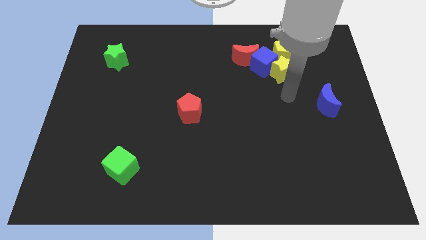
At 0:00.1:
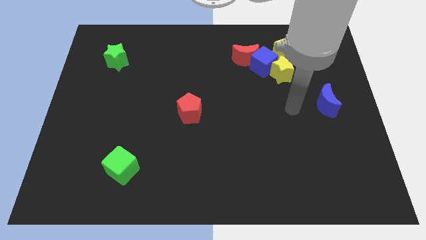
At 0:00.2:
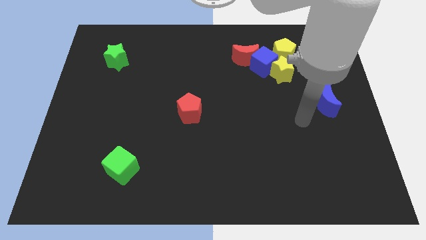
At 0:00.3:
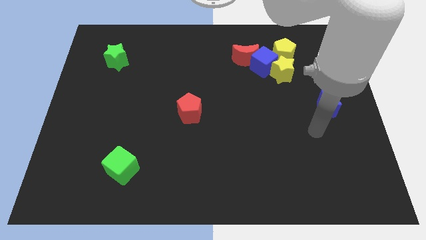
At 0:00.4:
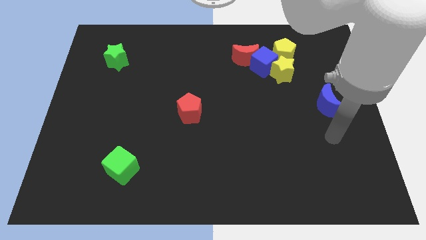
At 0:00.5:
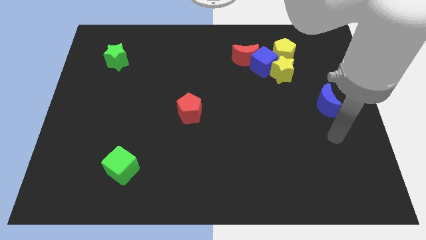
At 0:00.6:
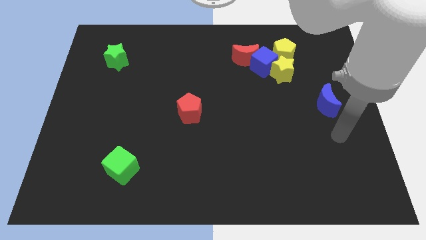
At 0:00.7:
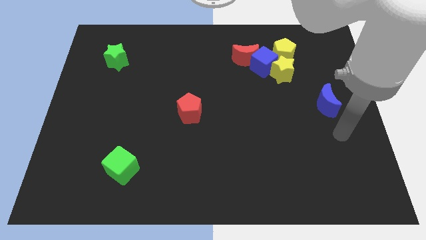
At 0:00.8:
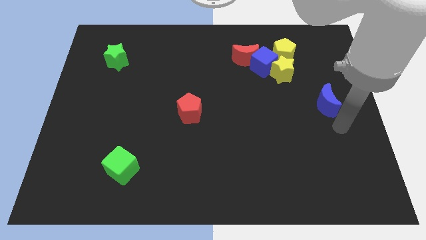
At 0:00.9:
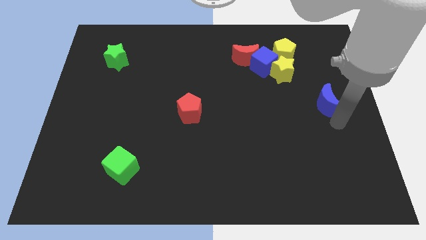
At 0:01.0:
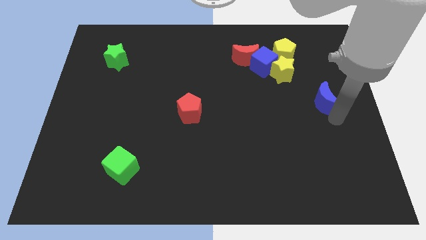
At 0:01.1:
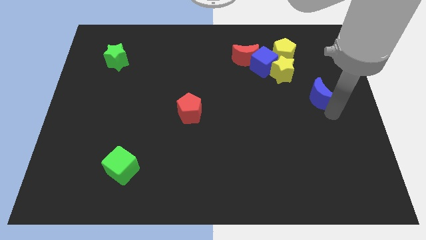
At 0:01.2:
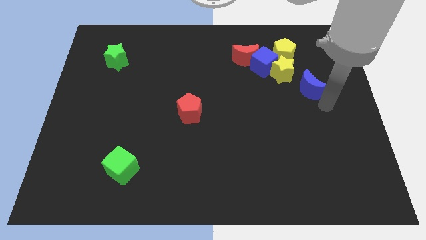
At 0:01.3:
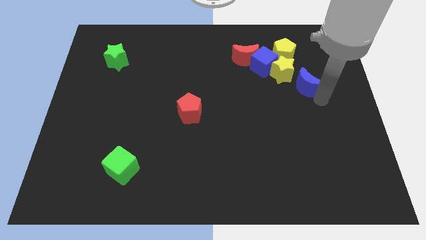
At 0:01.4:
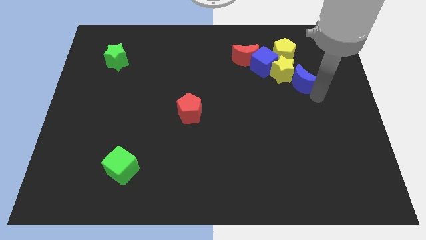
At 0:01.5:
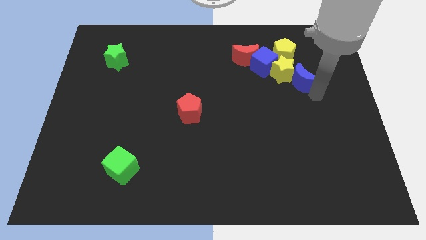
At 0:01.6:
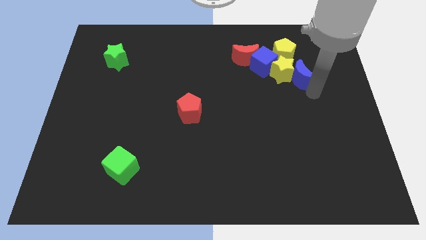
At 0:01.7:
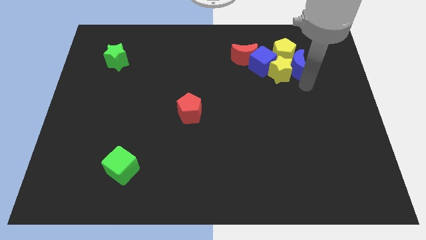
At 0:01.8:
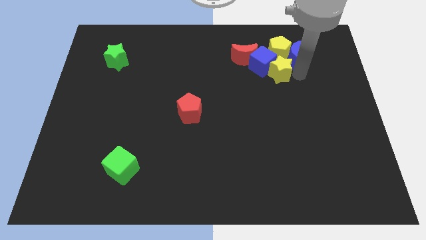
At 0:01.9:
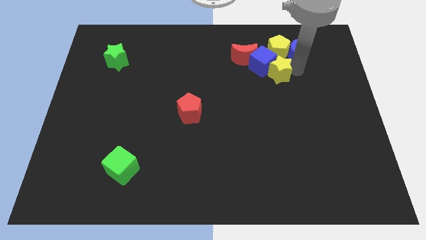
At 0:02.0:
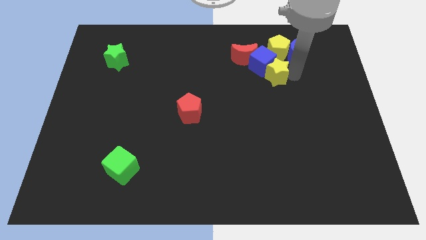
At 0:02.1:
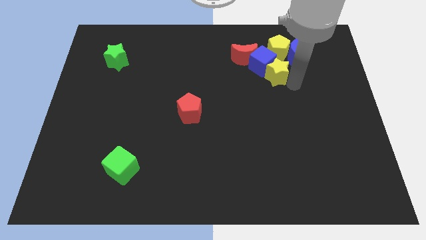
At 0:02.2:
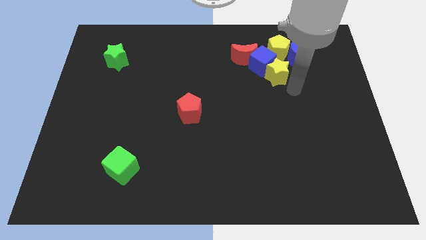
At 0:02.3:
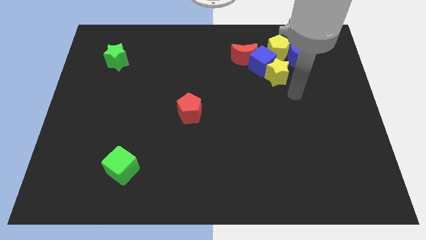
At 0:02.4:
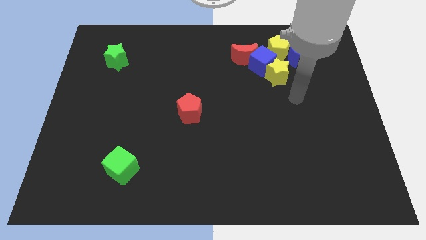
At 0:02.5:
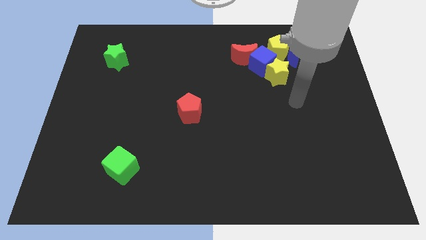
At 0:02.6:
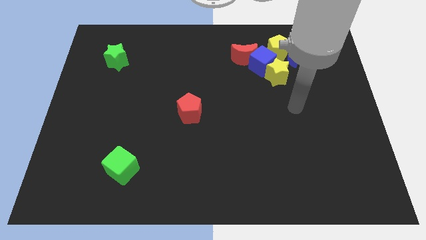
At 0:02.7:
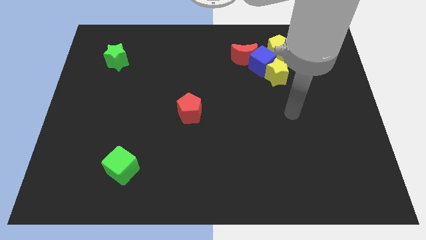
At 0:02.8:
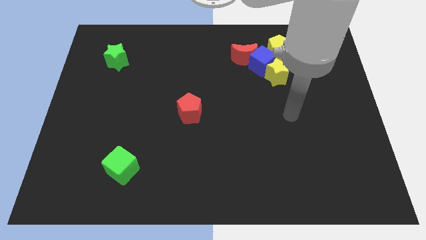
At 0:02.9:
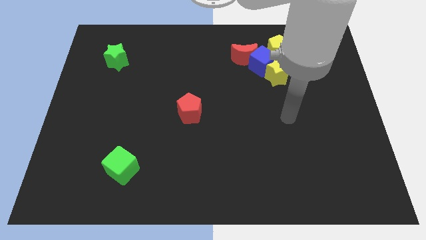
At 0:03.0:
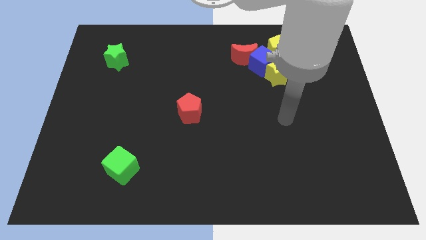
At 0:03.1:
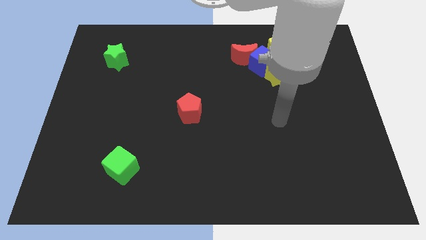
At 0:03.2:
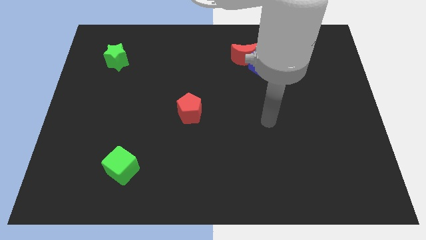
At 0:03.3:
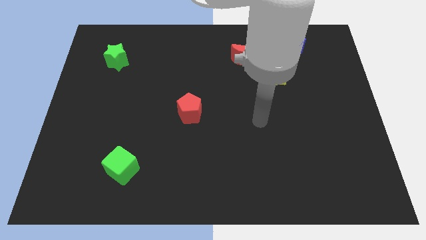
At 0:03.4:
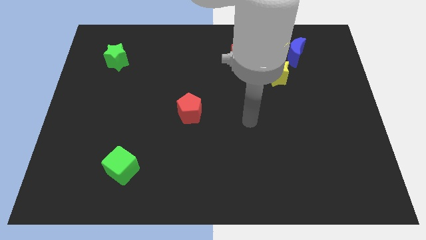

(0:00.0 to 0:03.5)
push the blue moon into the group of blocks

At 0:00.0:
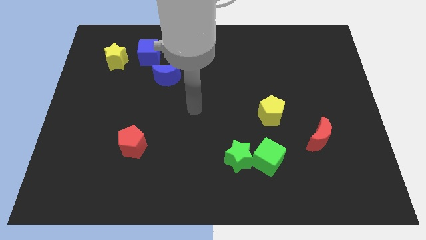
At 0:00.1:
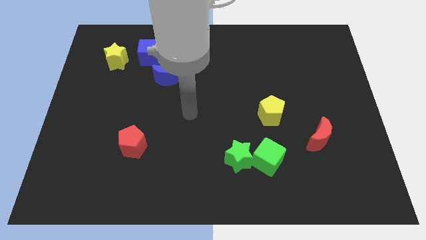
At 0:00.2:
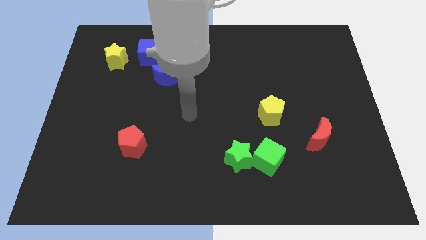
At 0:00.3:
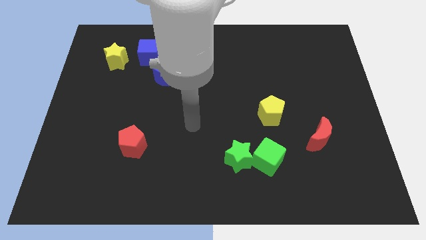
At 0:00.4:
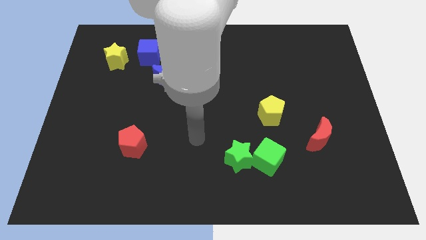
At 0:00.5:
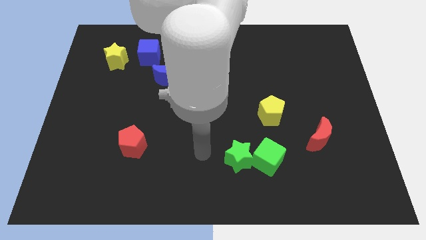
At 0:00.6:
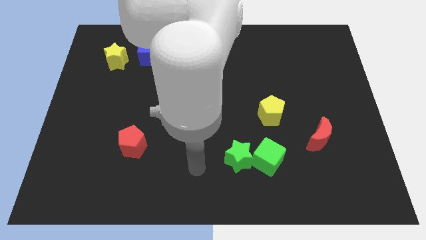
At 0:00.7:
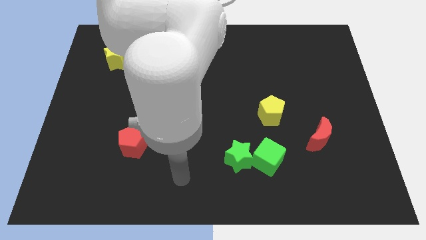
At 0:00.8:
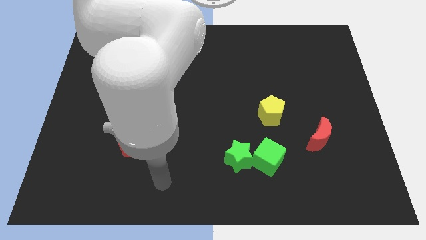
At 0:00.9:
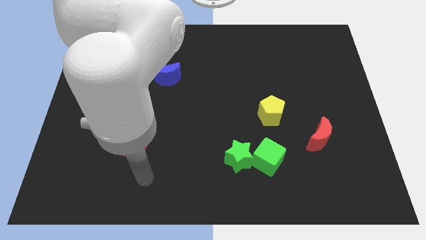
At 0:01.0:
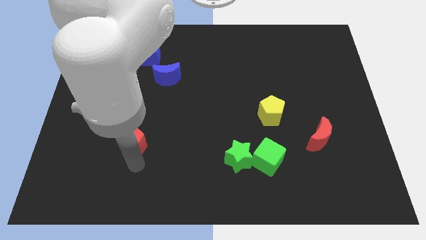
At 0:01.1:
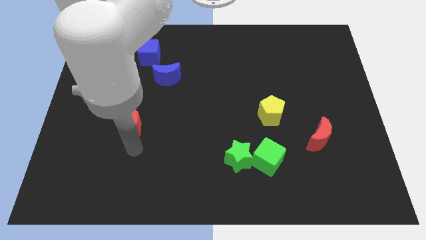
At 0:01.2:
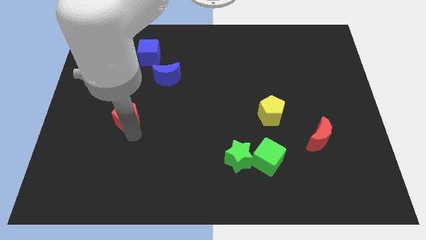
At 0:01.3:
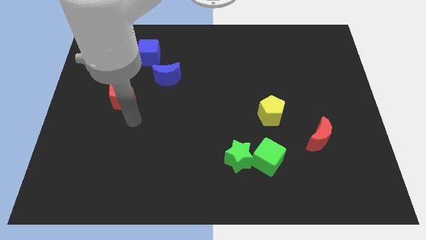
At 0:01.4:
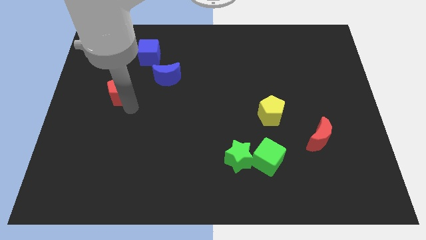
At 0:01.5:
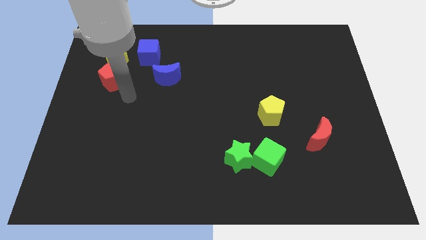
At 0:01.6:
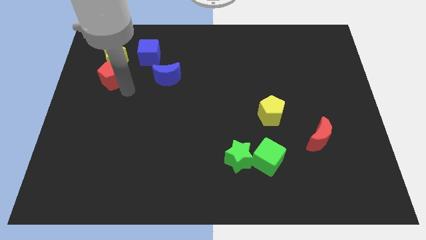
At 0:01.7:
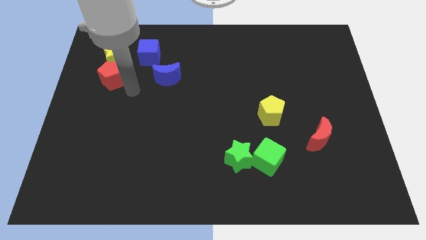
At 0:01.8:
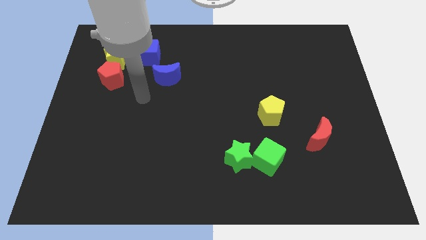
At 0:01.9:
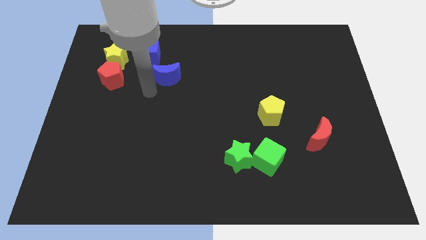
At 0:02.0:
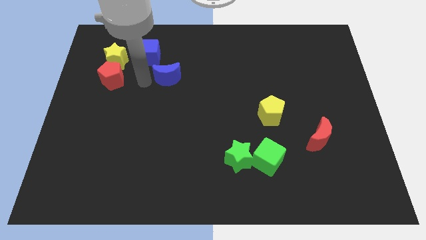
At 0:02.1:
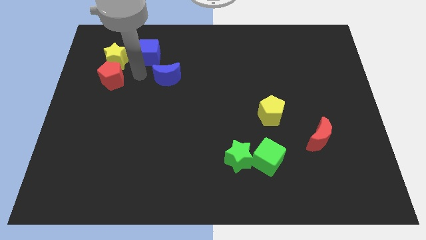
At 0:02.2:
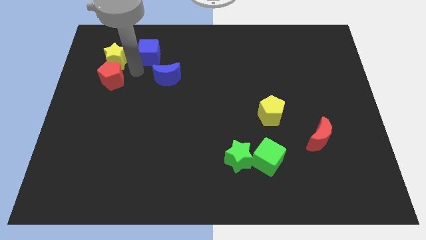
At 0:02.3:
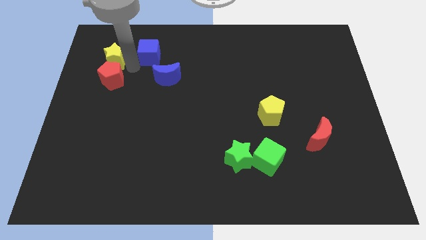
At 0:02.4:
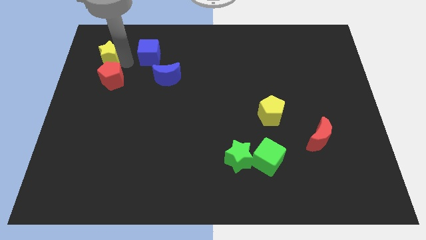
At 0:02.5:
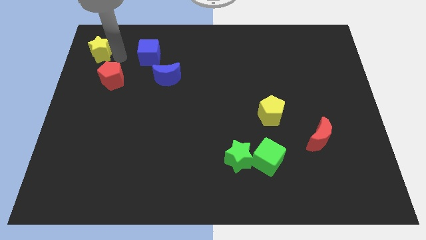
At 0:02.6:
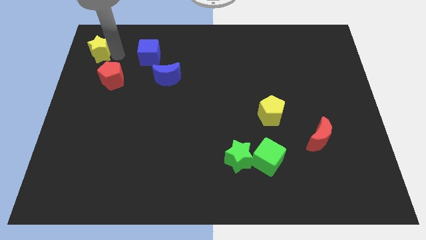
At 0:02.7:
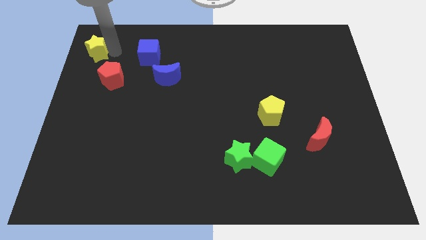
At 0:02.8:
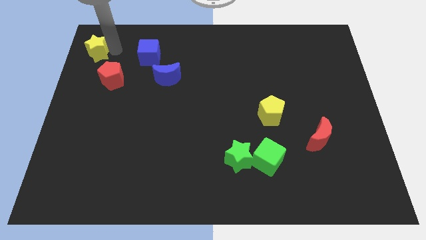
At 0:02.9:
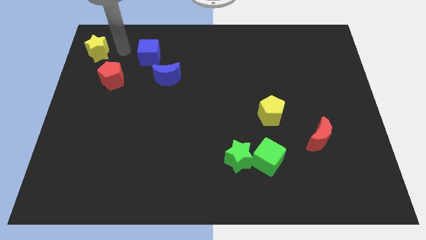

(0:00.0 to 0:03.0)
push the red pentagon upward

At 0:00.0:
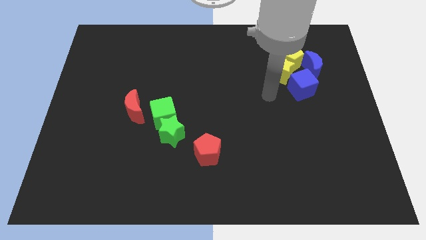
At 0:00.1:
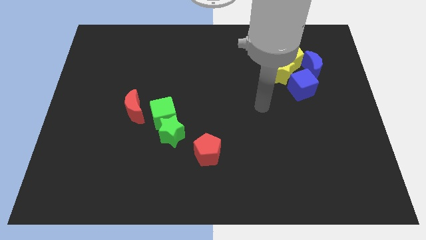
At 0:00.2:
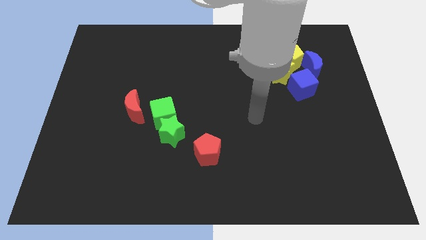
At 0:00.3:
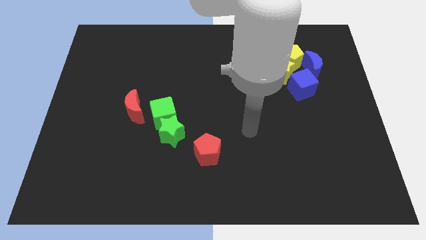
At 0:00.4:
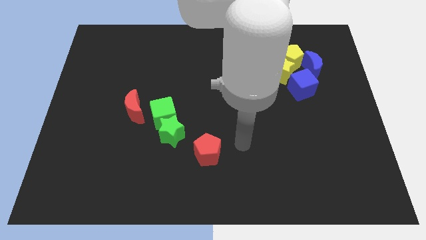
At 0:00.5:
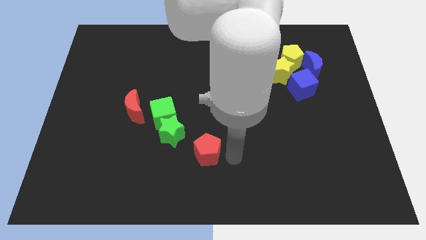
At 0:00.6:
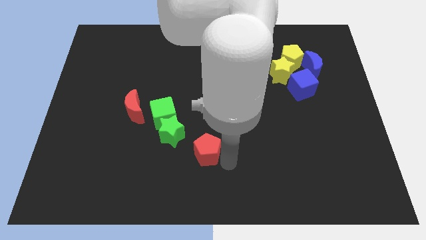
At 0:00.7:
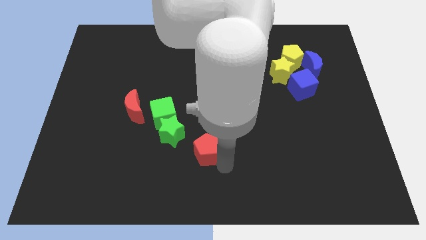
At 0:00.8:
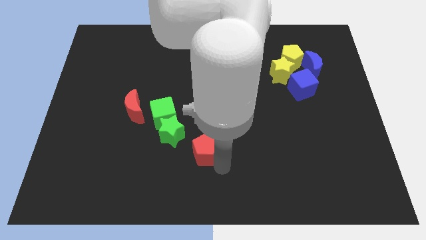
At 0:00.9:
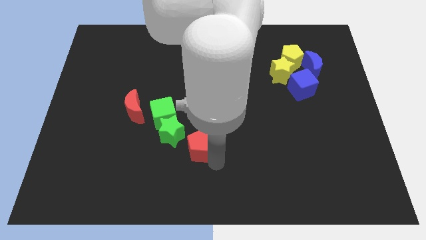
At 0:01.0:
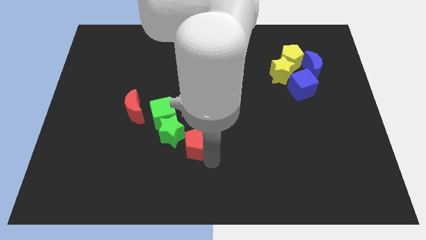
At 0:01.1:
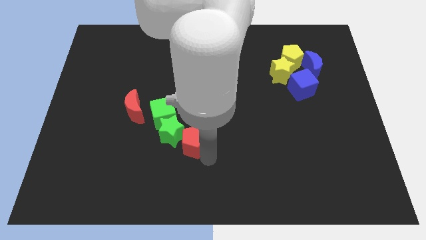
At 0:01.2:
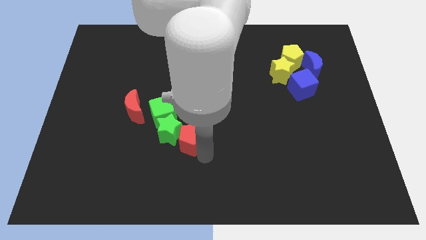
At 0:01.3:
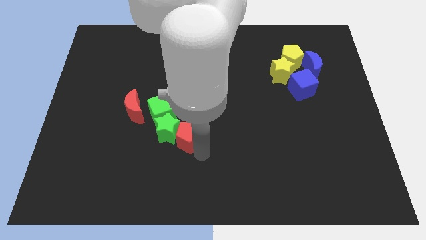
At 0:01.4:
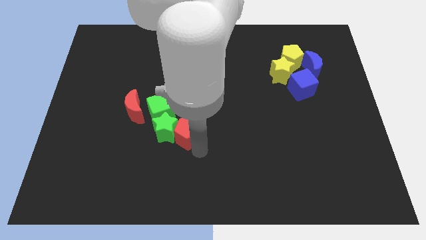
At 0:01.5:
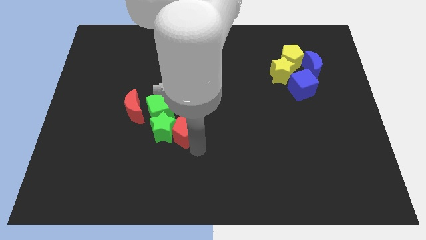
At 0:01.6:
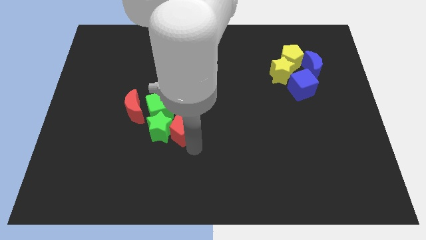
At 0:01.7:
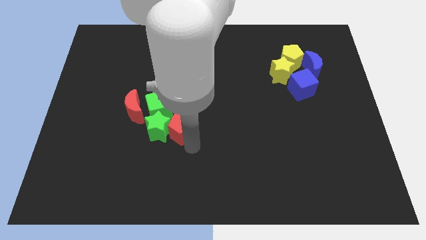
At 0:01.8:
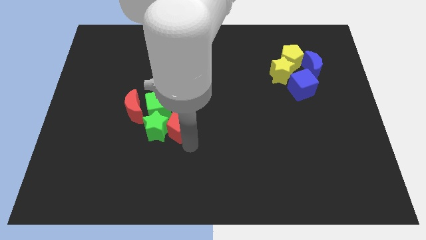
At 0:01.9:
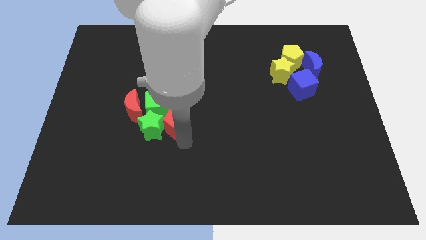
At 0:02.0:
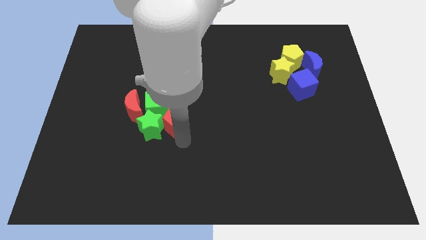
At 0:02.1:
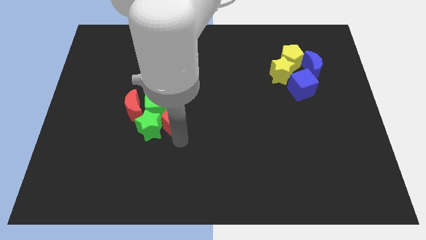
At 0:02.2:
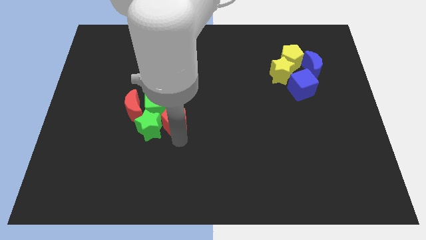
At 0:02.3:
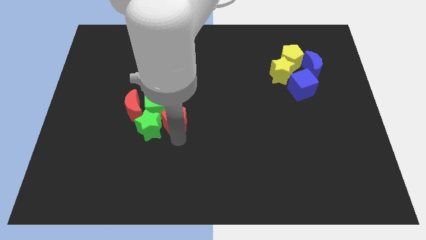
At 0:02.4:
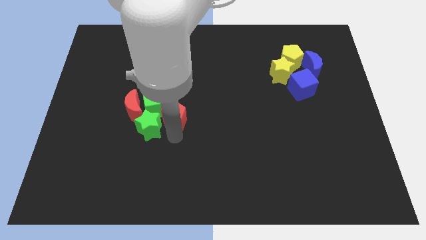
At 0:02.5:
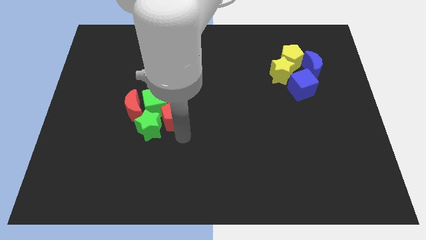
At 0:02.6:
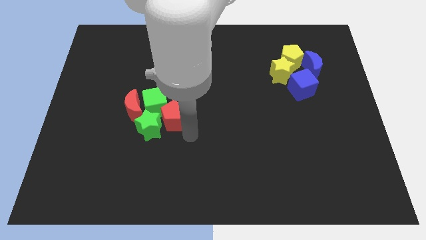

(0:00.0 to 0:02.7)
place the red pentagon to the group of blocks
